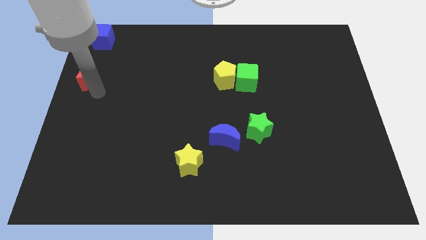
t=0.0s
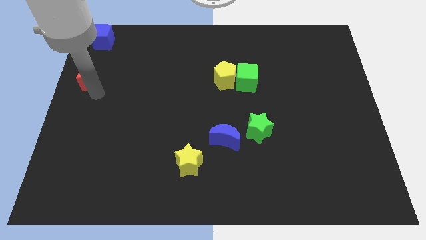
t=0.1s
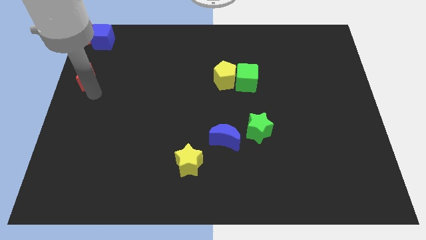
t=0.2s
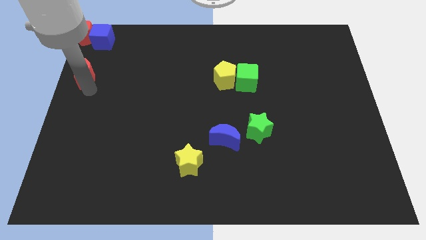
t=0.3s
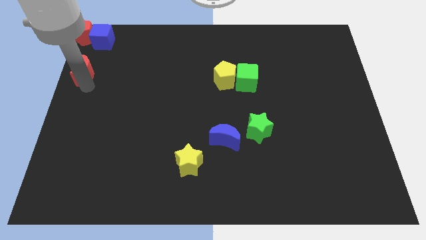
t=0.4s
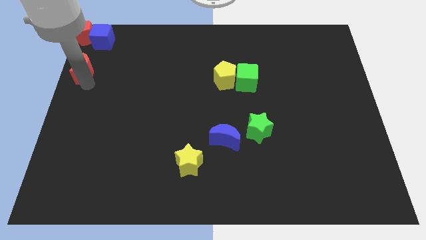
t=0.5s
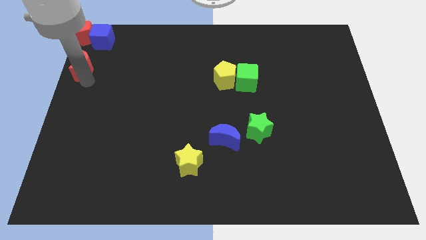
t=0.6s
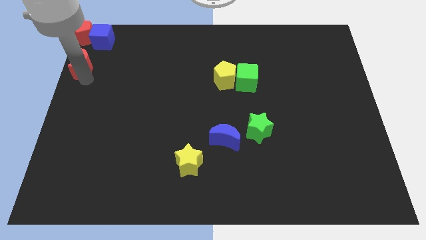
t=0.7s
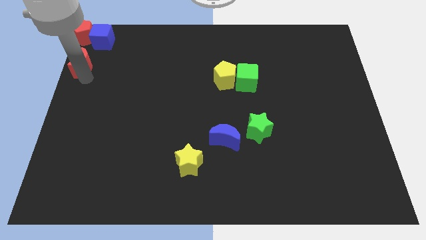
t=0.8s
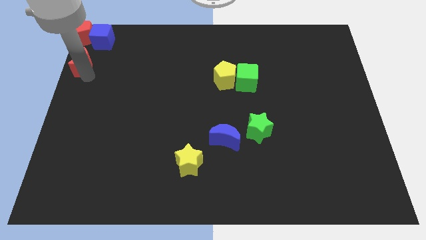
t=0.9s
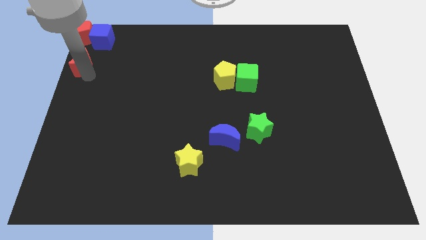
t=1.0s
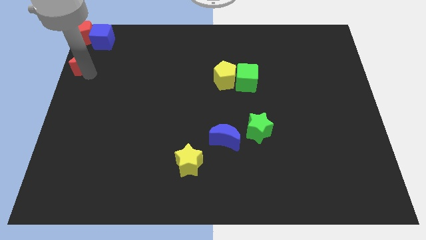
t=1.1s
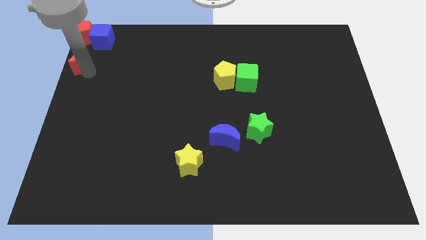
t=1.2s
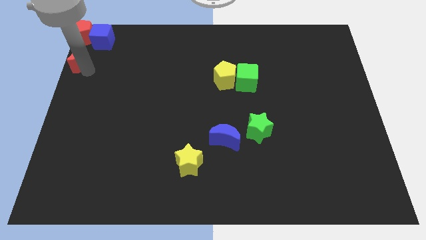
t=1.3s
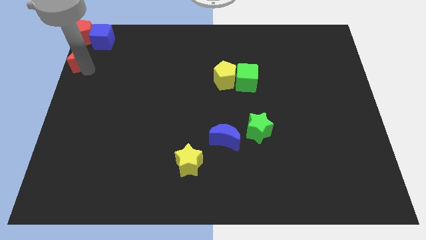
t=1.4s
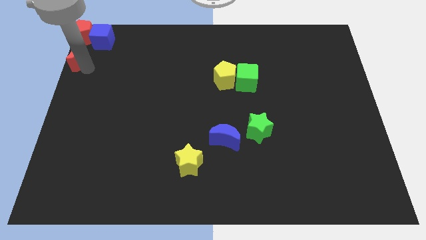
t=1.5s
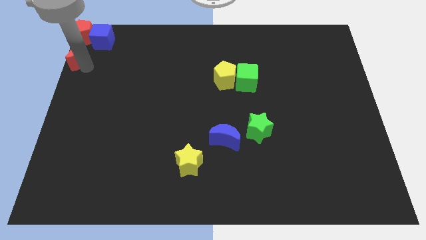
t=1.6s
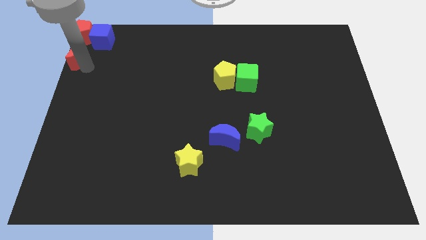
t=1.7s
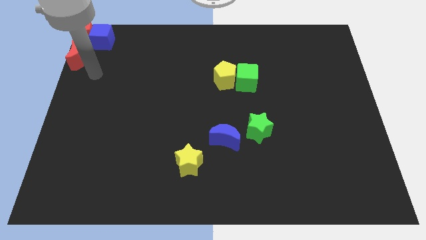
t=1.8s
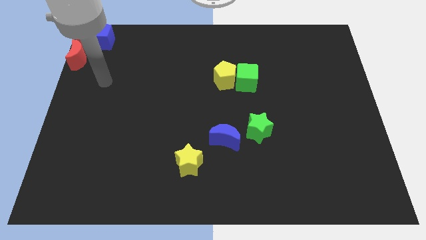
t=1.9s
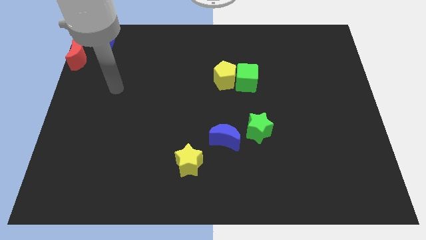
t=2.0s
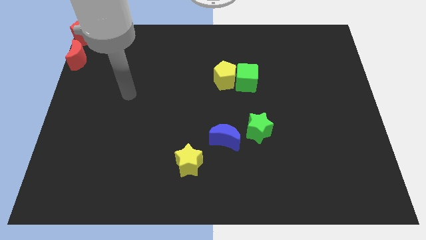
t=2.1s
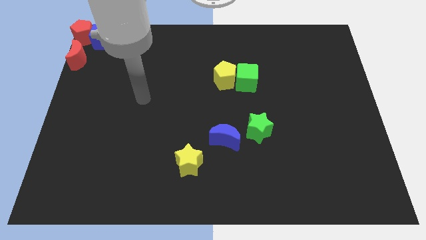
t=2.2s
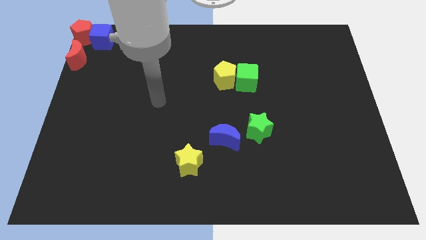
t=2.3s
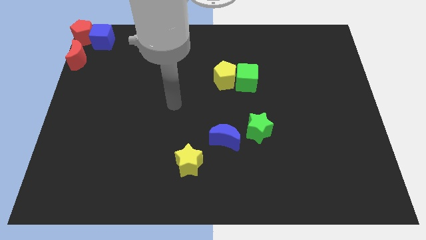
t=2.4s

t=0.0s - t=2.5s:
move the red moon below the red pentagon

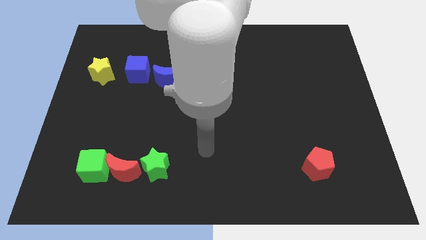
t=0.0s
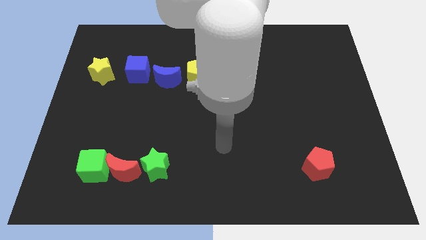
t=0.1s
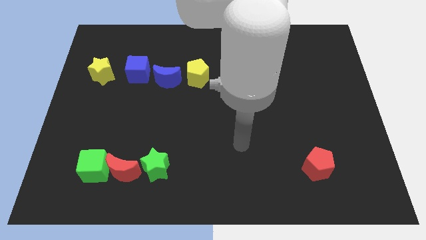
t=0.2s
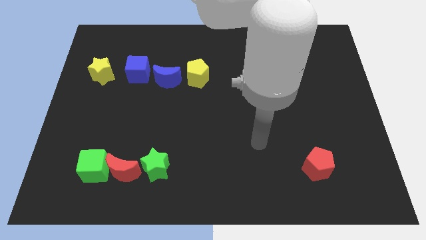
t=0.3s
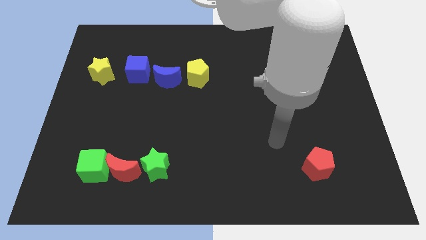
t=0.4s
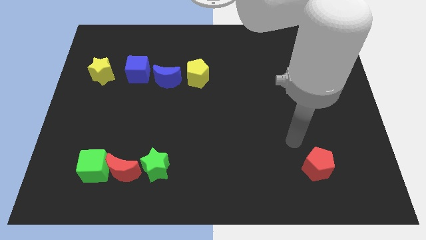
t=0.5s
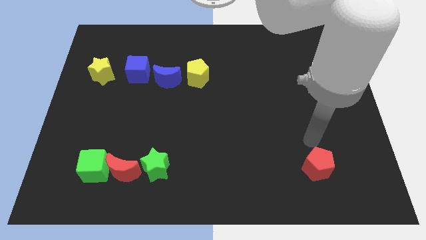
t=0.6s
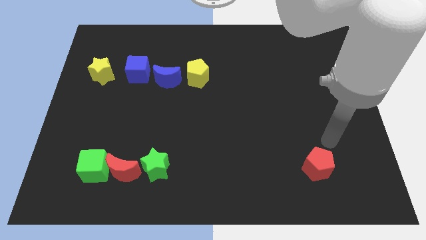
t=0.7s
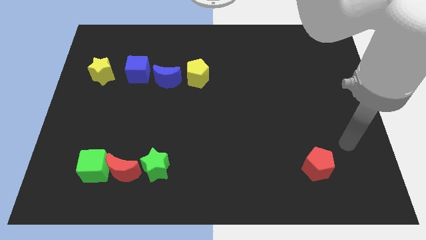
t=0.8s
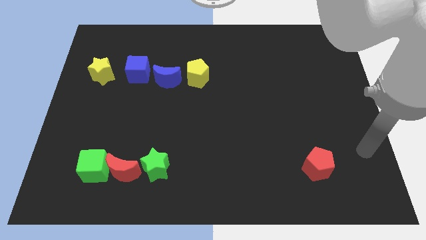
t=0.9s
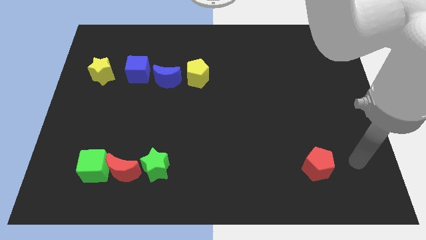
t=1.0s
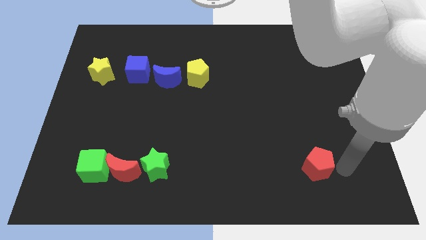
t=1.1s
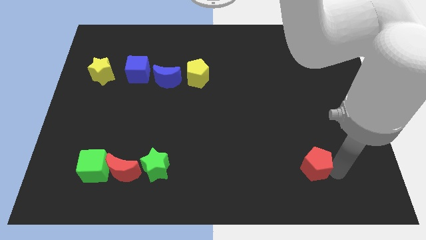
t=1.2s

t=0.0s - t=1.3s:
move the arm towards the red pentagon

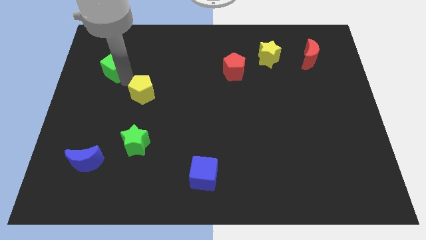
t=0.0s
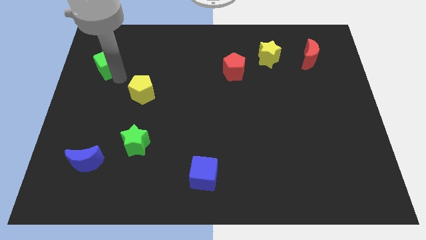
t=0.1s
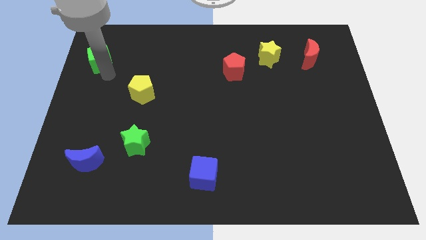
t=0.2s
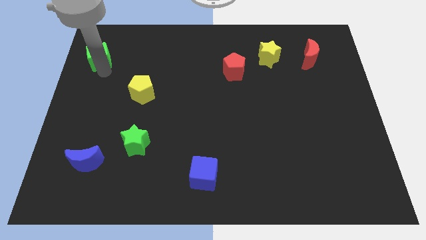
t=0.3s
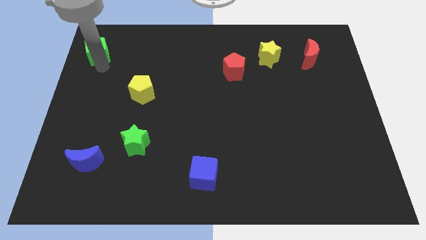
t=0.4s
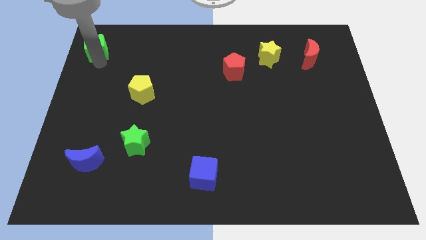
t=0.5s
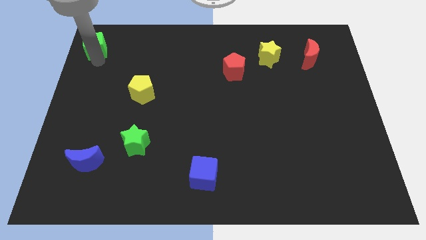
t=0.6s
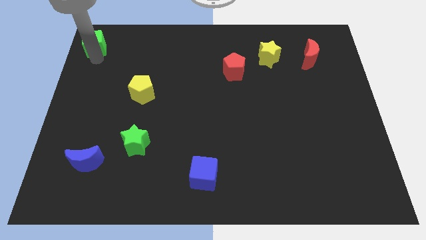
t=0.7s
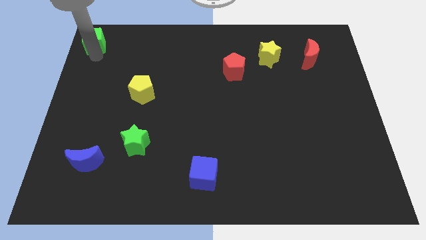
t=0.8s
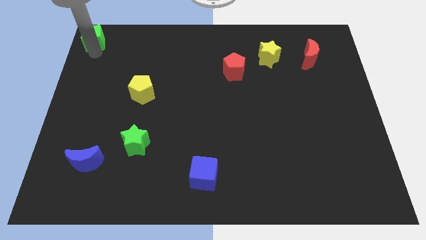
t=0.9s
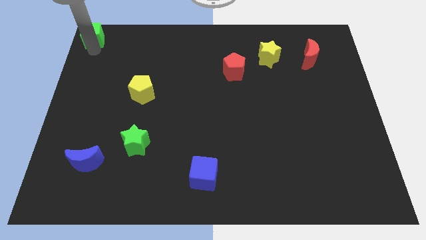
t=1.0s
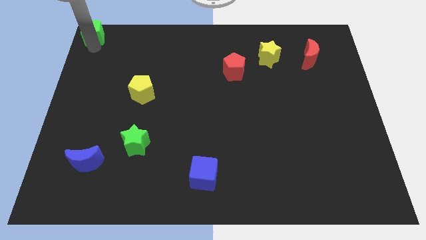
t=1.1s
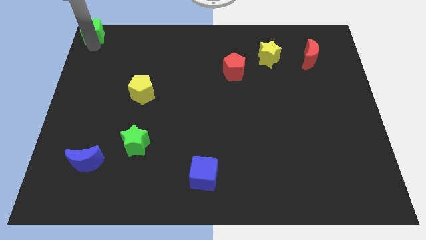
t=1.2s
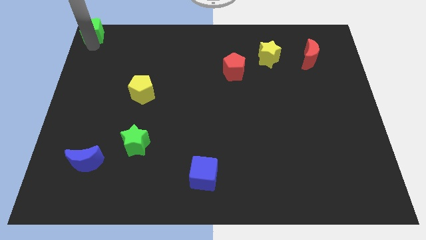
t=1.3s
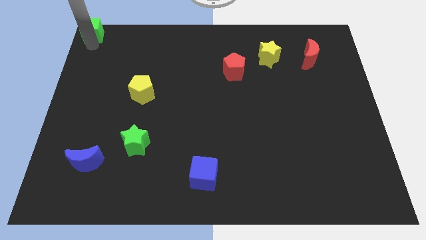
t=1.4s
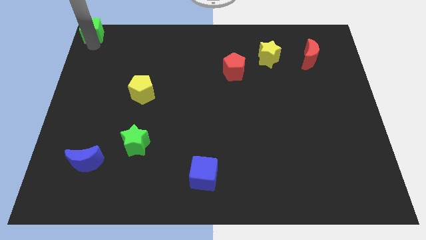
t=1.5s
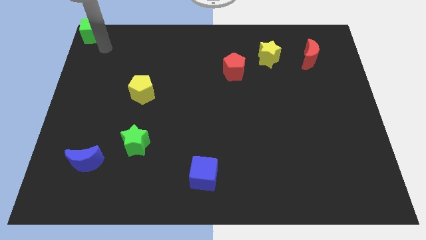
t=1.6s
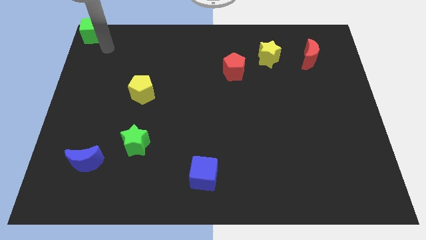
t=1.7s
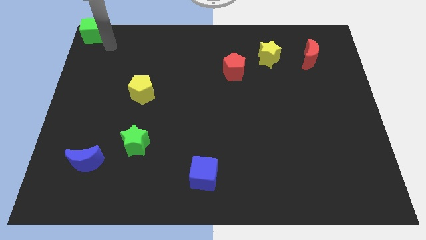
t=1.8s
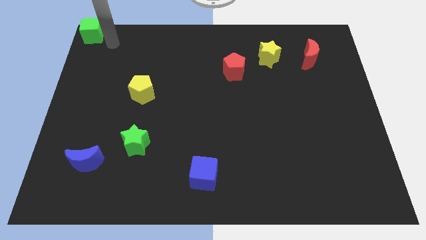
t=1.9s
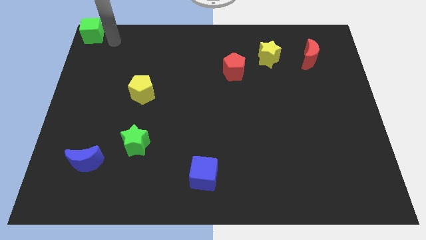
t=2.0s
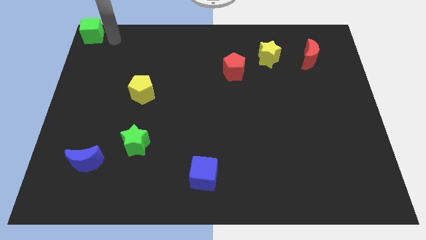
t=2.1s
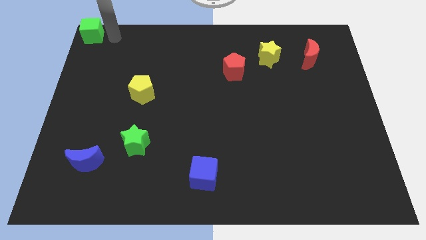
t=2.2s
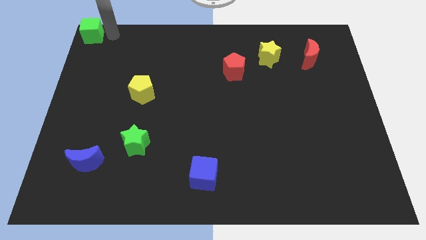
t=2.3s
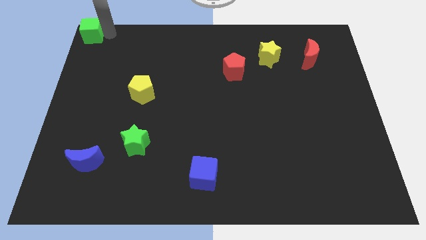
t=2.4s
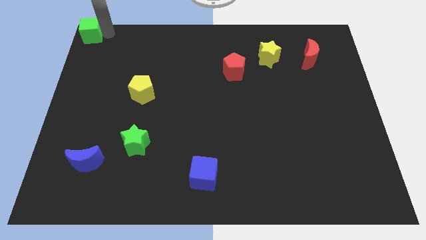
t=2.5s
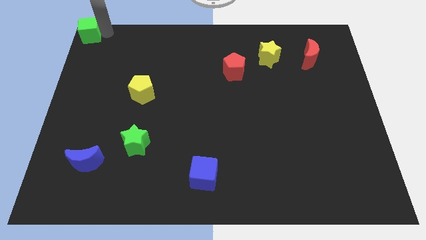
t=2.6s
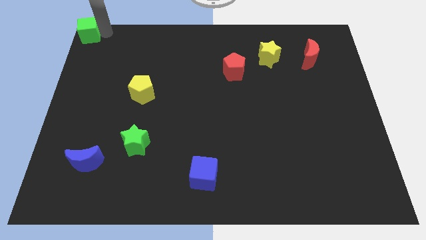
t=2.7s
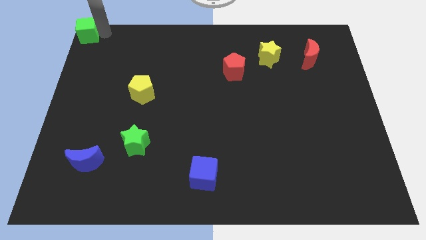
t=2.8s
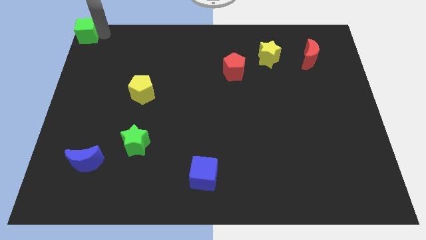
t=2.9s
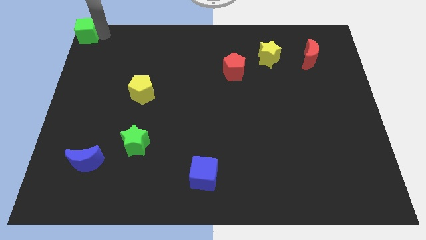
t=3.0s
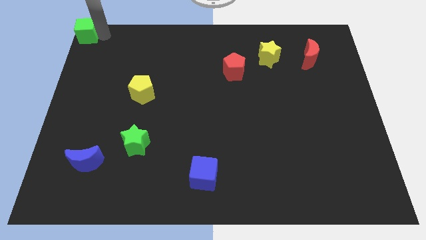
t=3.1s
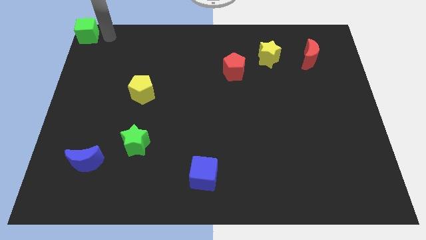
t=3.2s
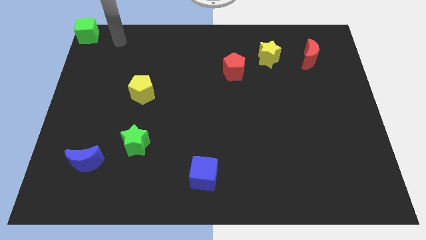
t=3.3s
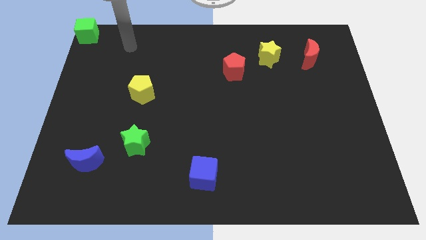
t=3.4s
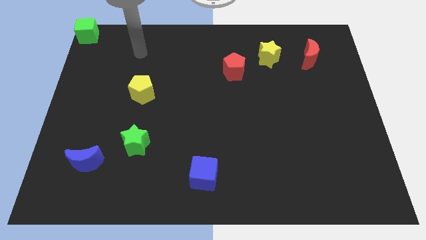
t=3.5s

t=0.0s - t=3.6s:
move the green cube to the top left corner of the board

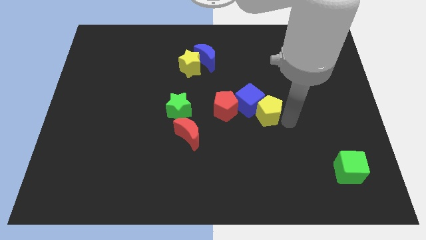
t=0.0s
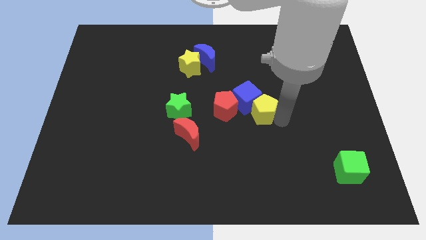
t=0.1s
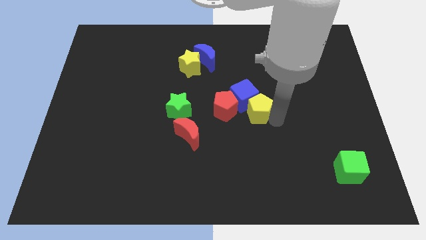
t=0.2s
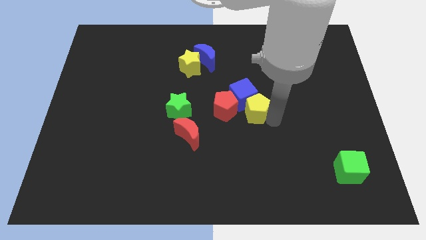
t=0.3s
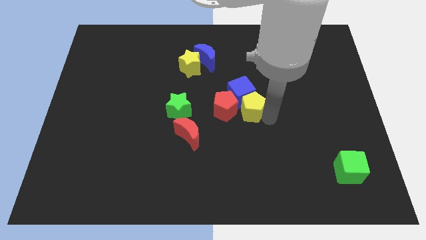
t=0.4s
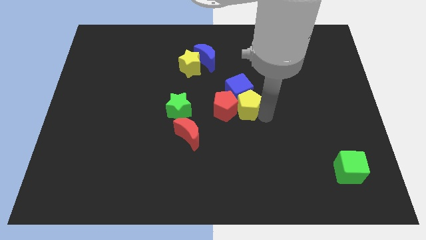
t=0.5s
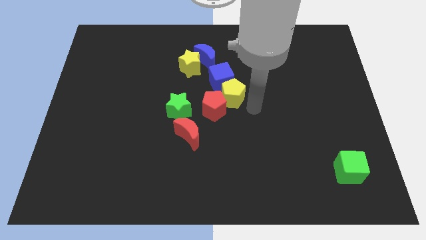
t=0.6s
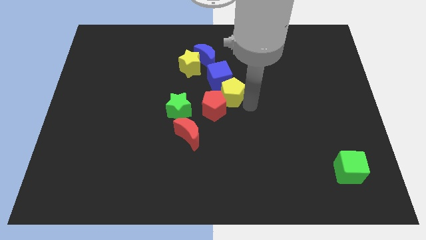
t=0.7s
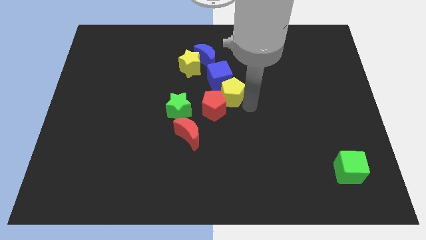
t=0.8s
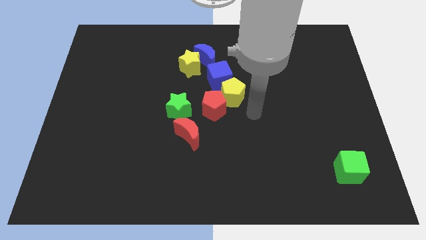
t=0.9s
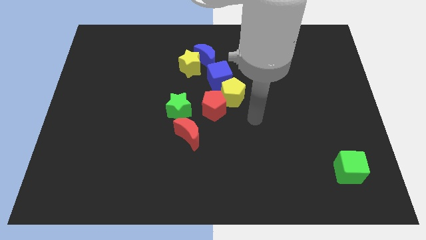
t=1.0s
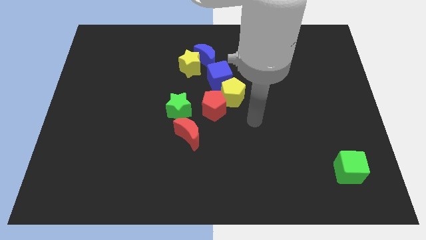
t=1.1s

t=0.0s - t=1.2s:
move the blue cube and red pentagon with the yellow pentagon

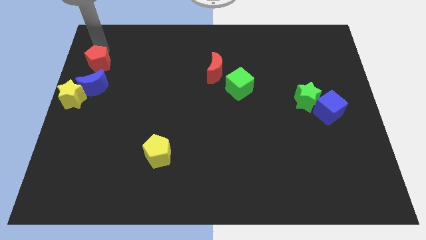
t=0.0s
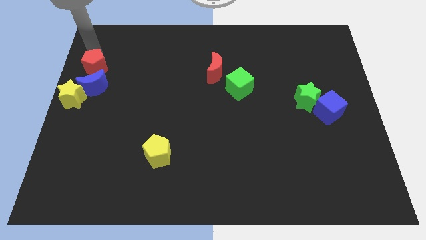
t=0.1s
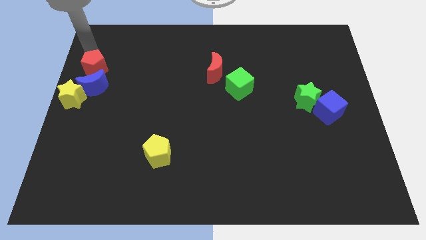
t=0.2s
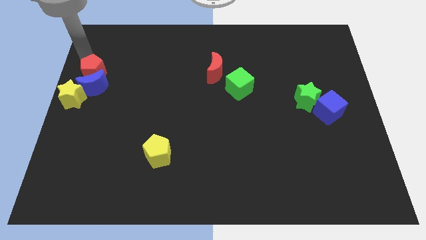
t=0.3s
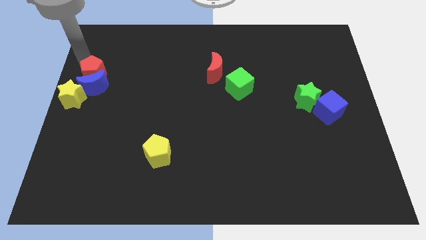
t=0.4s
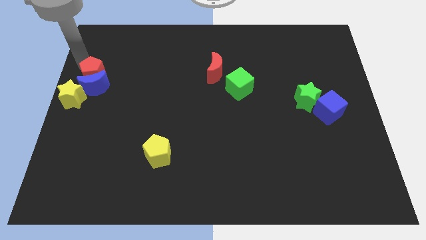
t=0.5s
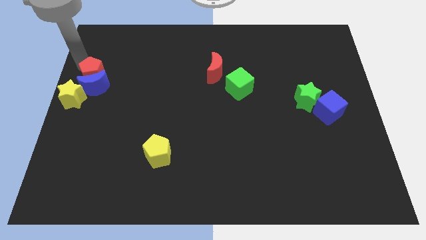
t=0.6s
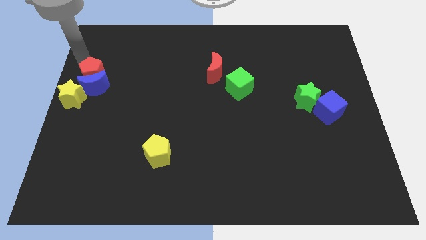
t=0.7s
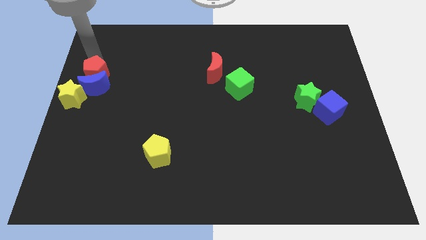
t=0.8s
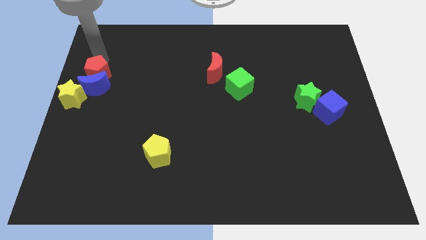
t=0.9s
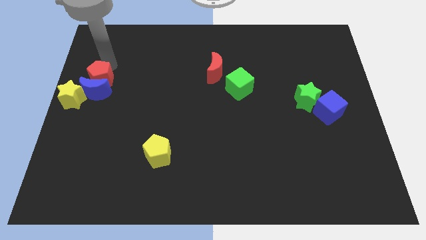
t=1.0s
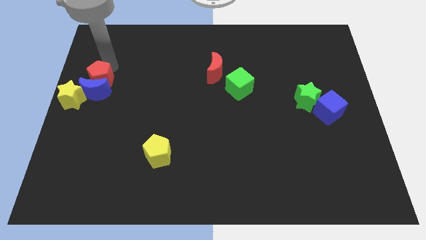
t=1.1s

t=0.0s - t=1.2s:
push the red pentagon into the blue moon
